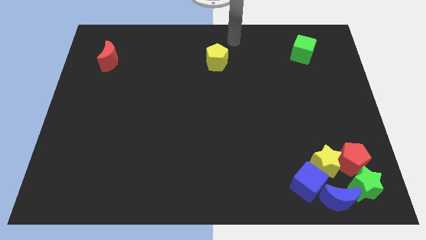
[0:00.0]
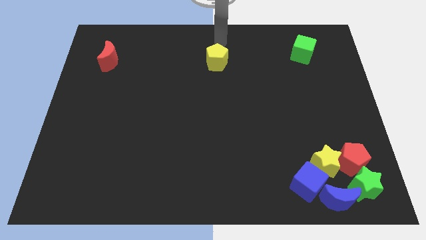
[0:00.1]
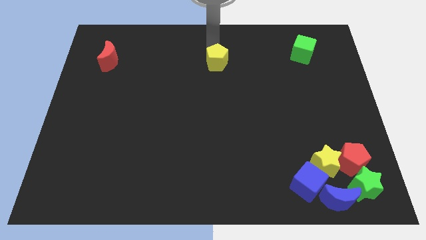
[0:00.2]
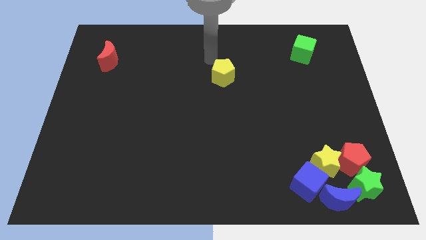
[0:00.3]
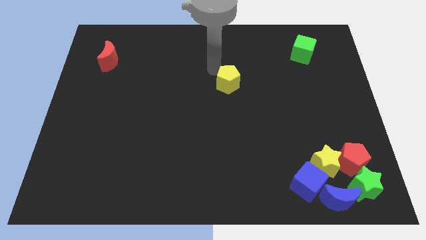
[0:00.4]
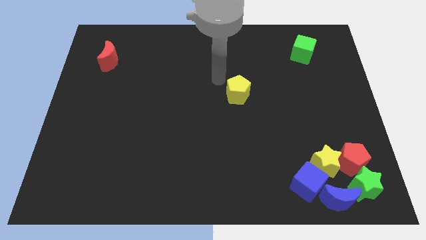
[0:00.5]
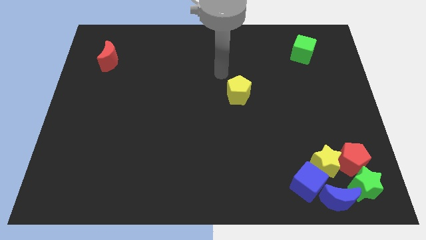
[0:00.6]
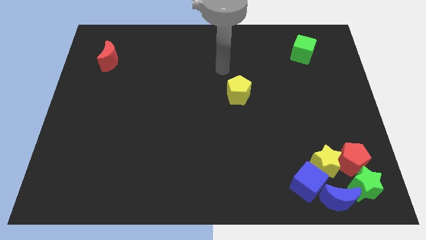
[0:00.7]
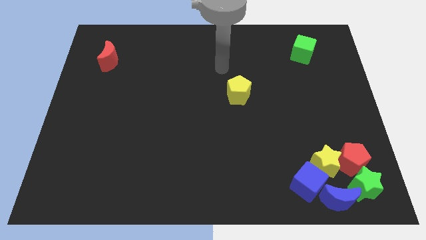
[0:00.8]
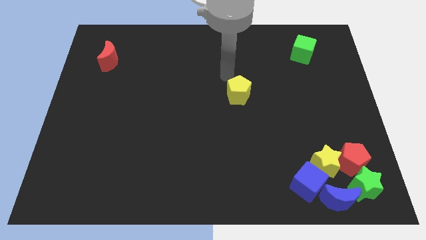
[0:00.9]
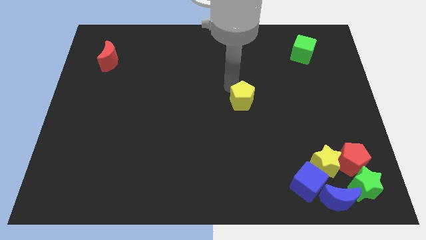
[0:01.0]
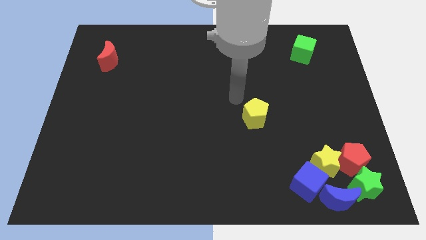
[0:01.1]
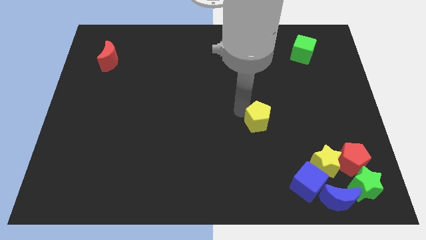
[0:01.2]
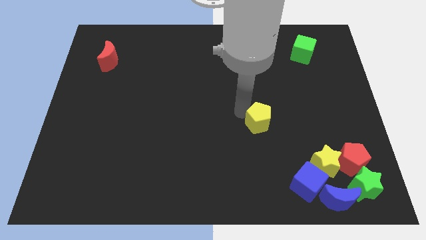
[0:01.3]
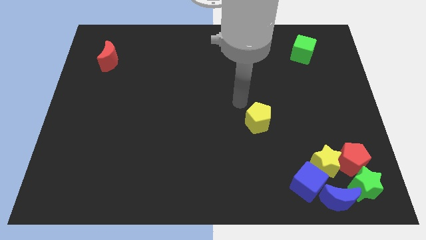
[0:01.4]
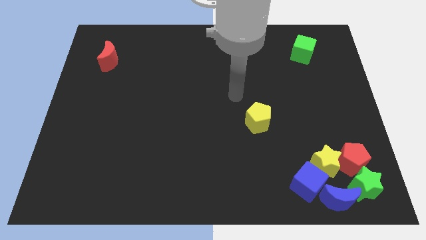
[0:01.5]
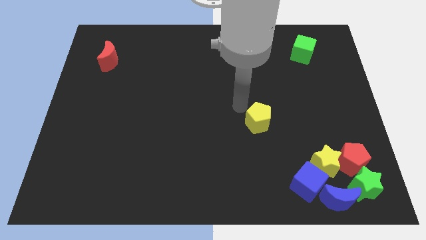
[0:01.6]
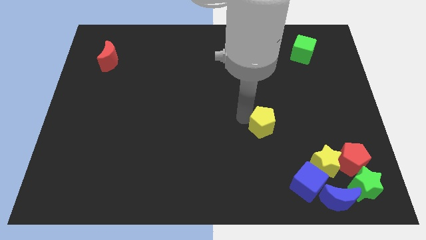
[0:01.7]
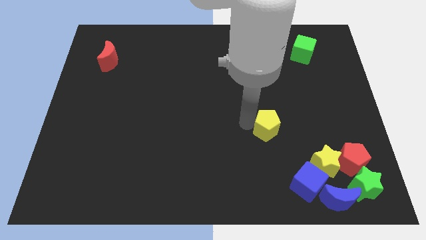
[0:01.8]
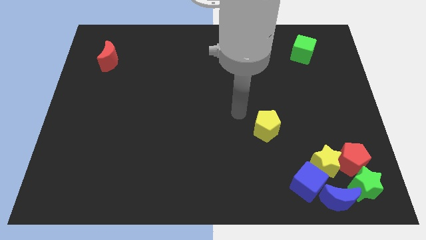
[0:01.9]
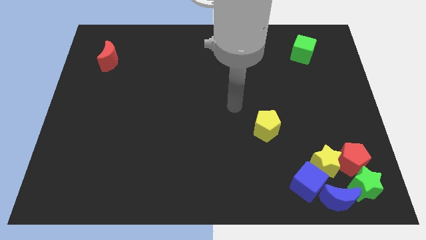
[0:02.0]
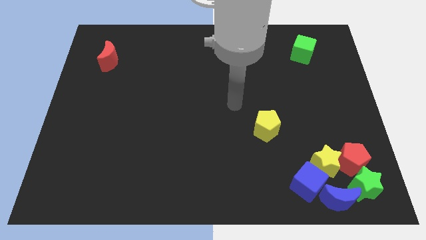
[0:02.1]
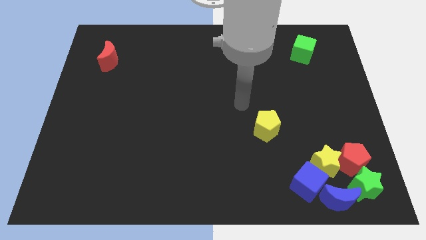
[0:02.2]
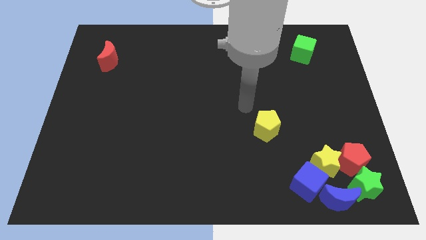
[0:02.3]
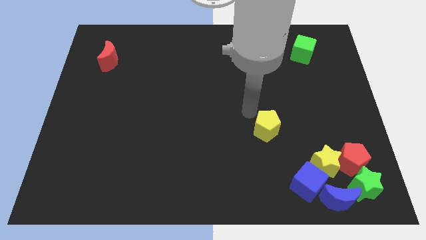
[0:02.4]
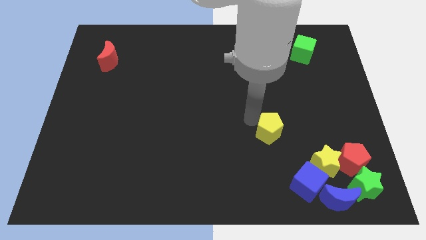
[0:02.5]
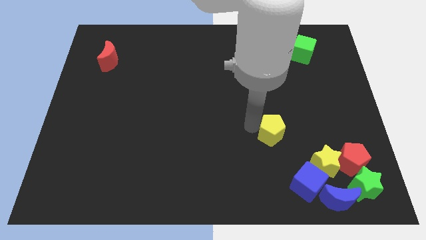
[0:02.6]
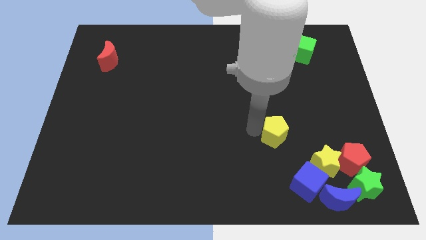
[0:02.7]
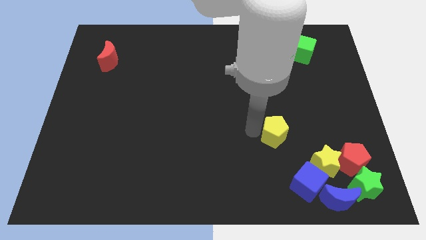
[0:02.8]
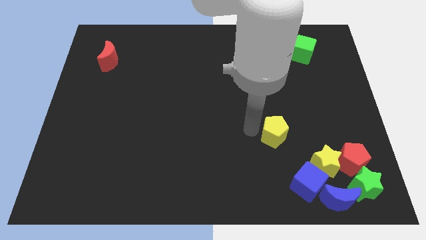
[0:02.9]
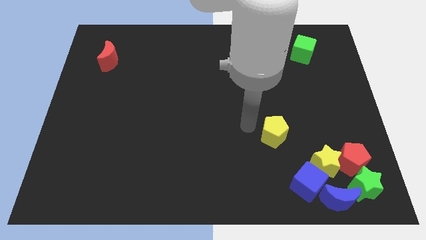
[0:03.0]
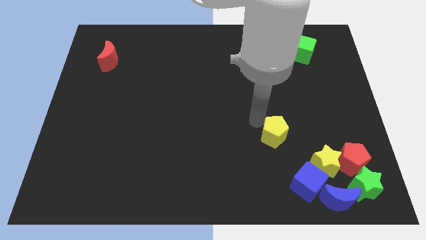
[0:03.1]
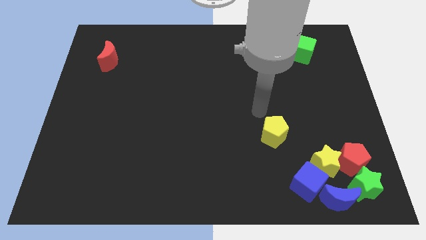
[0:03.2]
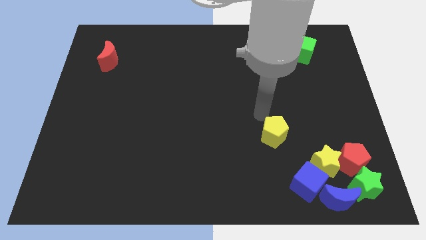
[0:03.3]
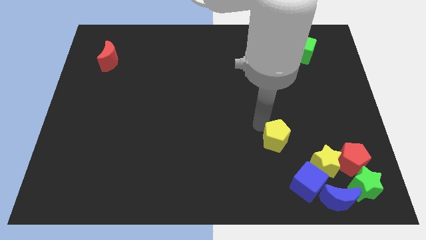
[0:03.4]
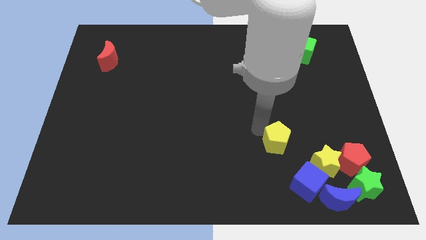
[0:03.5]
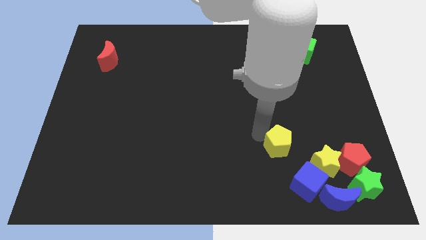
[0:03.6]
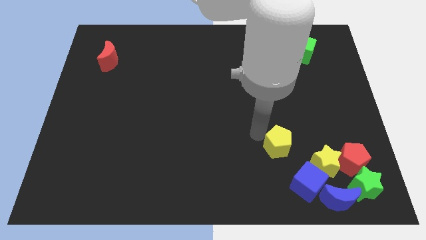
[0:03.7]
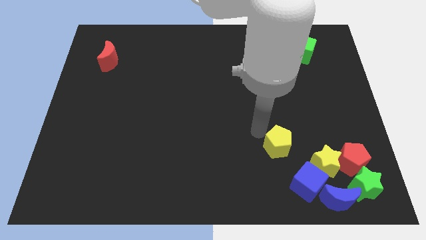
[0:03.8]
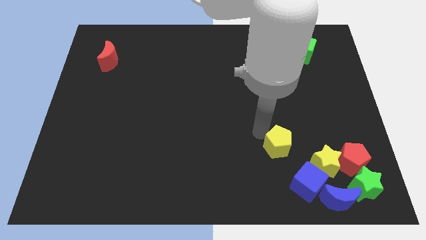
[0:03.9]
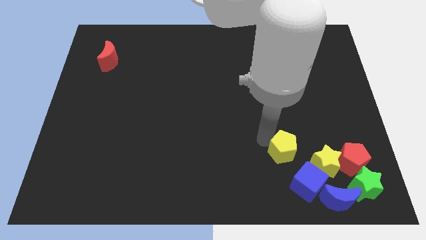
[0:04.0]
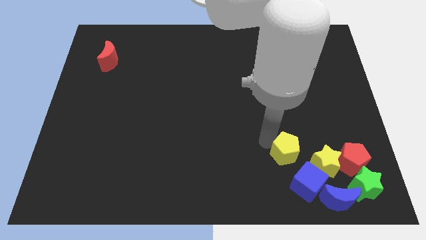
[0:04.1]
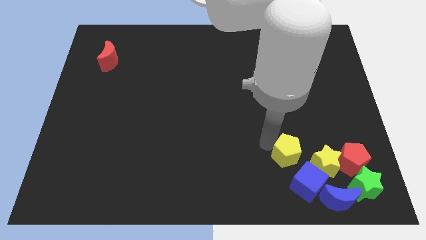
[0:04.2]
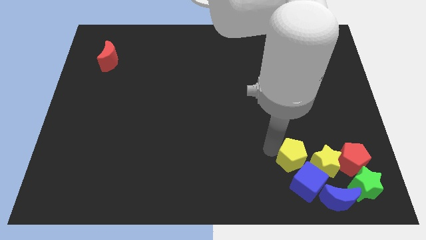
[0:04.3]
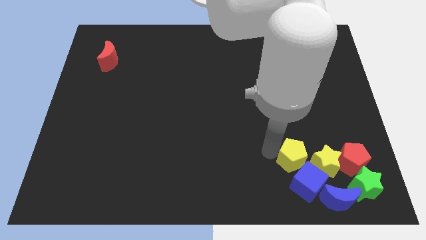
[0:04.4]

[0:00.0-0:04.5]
move the yellow pentagon towards blue cube

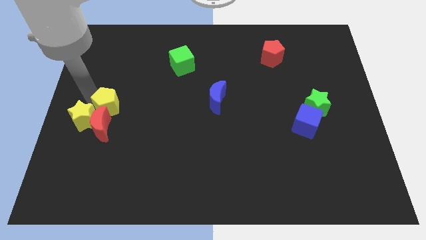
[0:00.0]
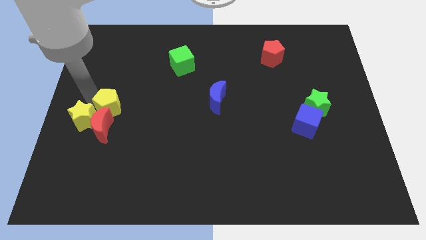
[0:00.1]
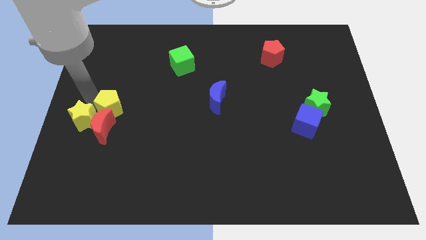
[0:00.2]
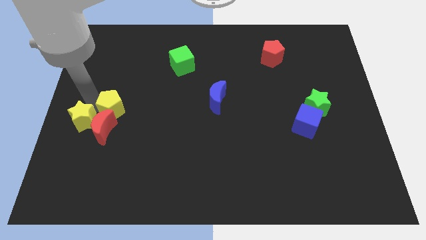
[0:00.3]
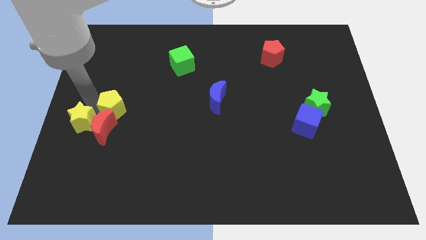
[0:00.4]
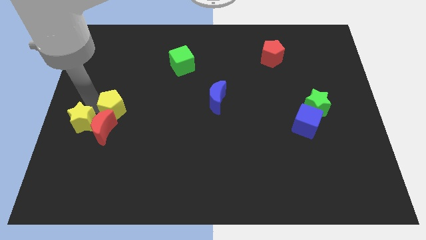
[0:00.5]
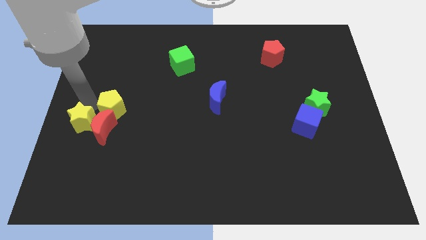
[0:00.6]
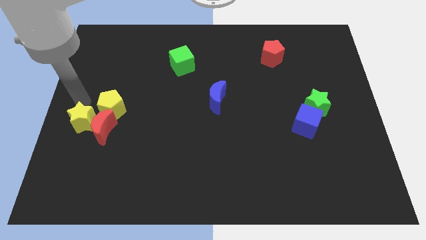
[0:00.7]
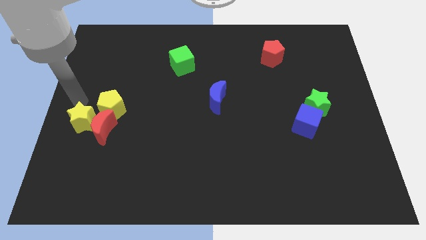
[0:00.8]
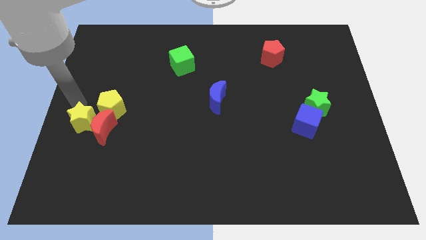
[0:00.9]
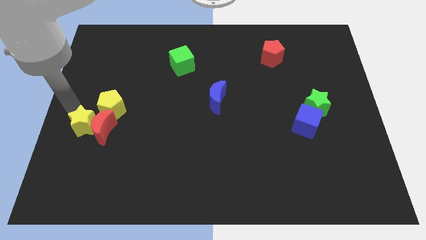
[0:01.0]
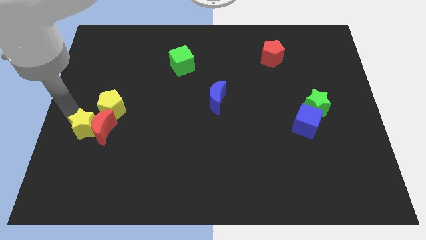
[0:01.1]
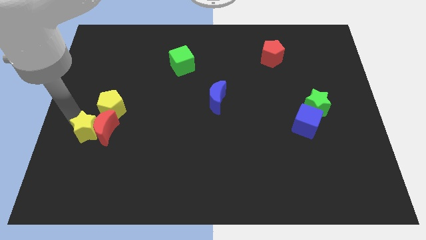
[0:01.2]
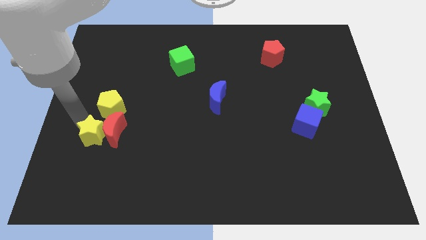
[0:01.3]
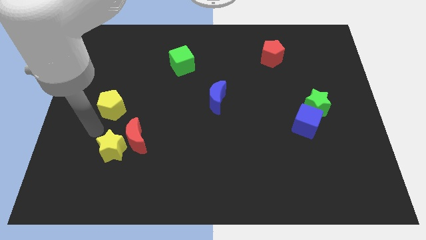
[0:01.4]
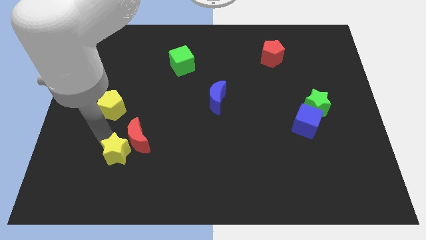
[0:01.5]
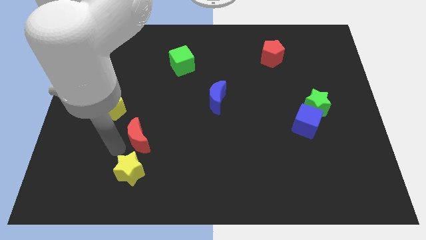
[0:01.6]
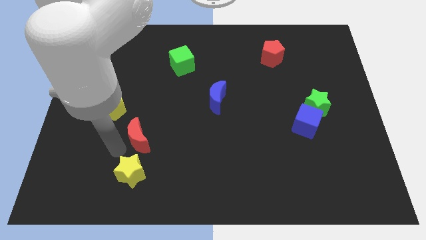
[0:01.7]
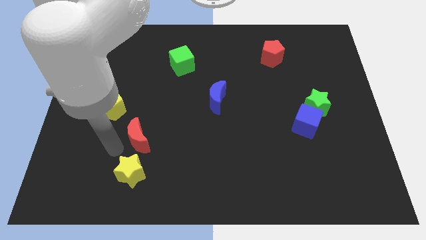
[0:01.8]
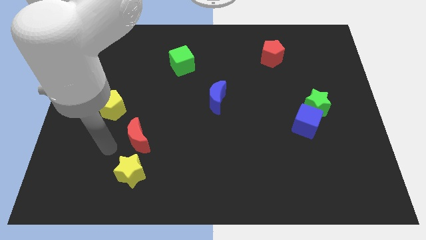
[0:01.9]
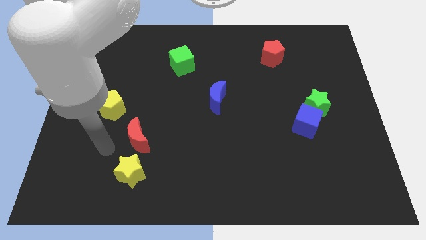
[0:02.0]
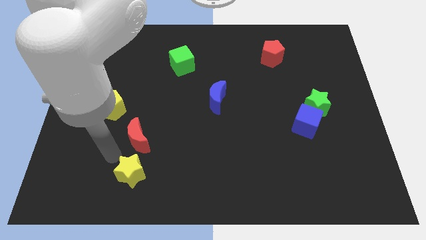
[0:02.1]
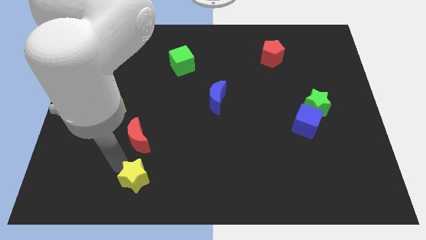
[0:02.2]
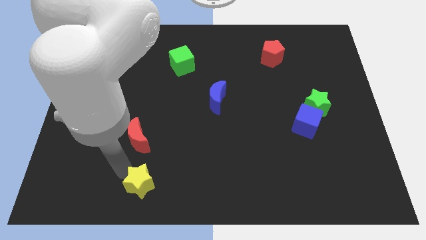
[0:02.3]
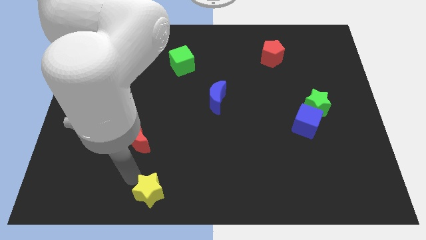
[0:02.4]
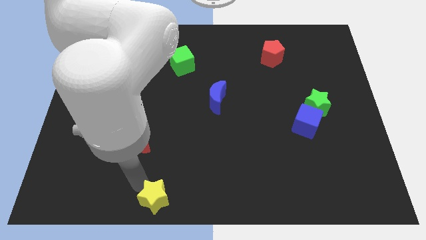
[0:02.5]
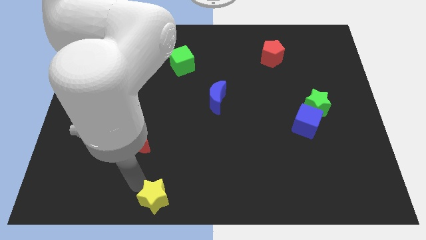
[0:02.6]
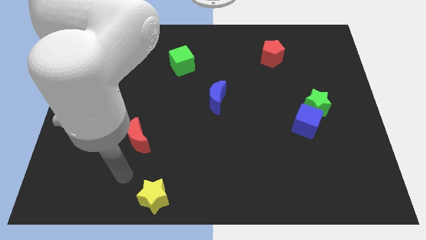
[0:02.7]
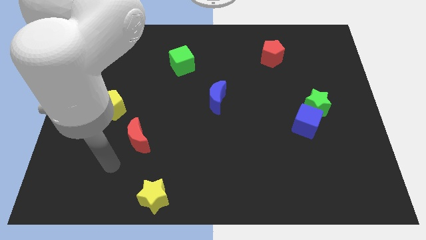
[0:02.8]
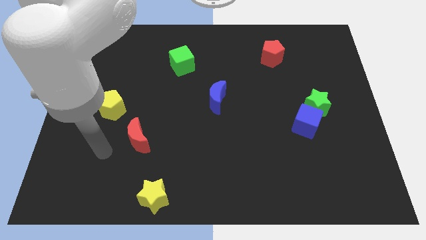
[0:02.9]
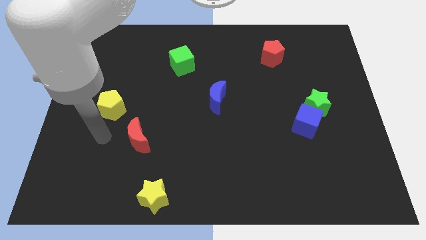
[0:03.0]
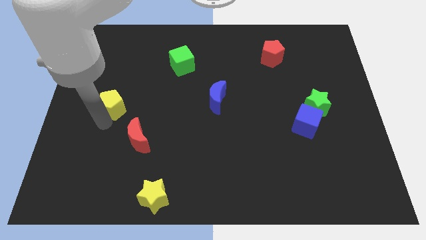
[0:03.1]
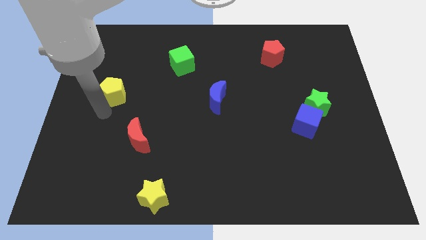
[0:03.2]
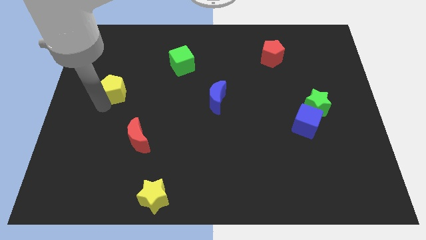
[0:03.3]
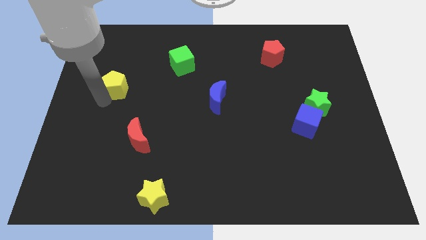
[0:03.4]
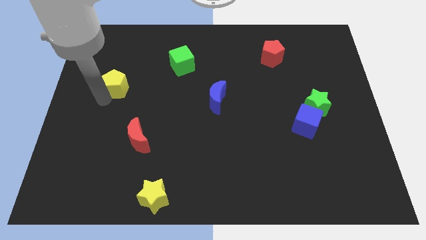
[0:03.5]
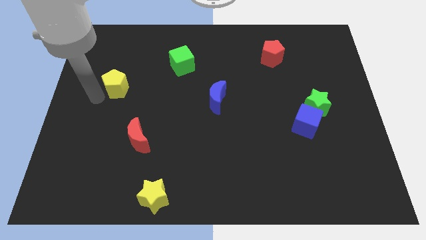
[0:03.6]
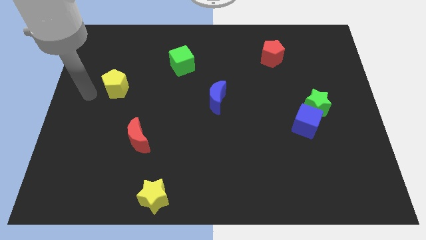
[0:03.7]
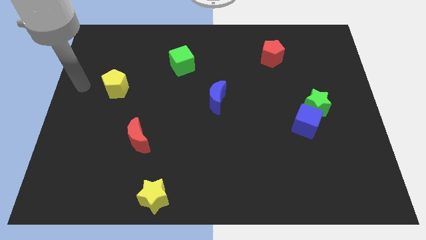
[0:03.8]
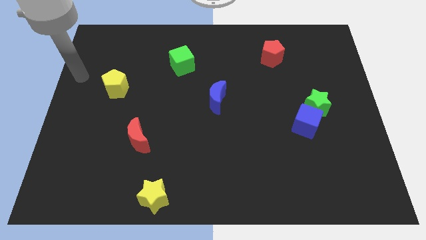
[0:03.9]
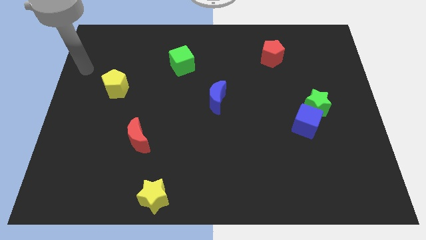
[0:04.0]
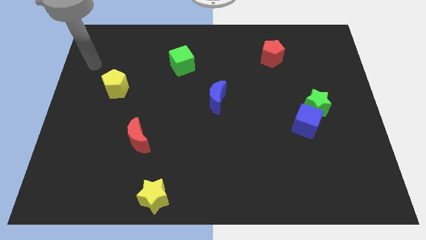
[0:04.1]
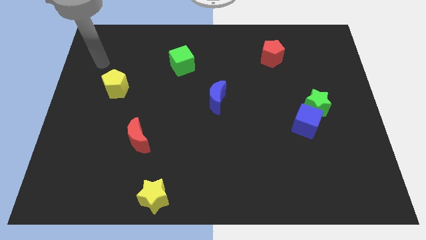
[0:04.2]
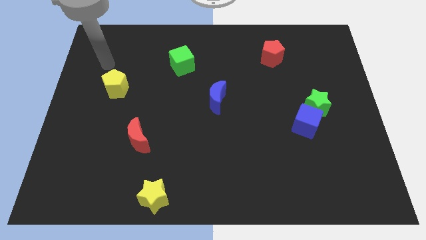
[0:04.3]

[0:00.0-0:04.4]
push the yellow star towards the bottom center
